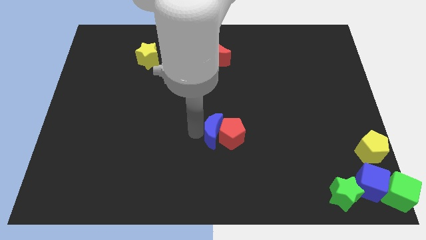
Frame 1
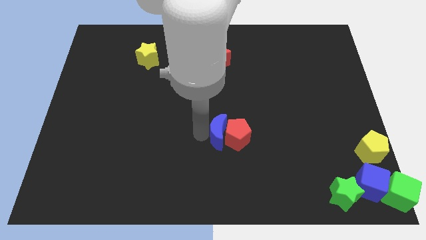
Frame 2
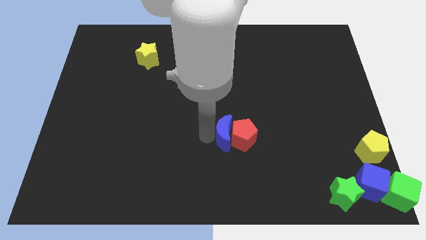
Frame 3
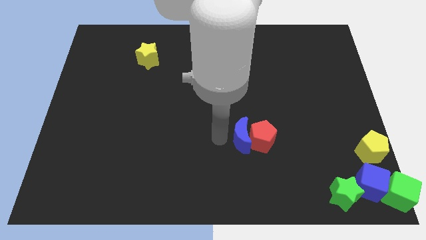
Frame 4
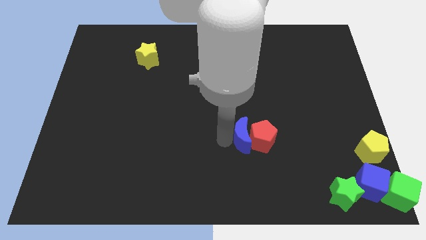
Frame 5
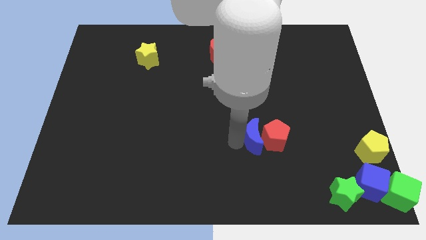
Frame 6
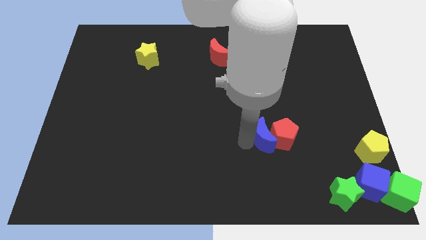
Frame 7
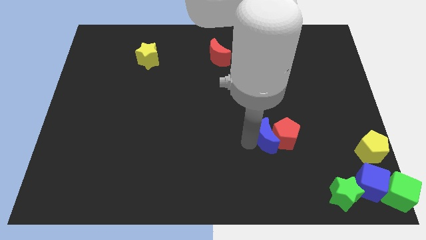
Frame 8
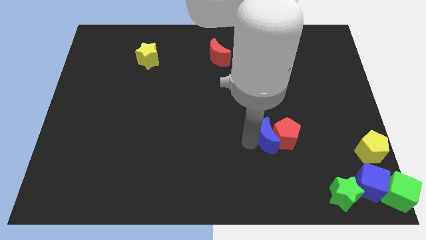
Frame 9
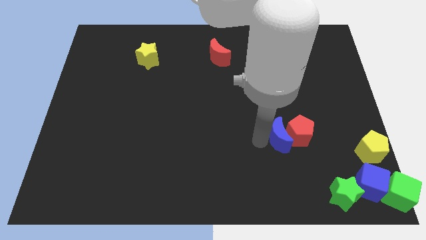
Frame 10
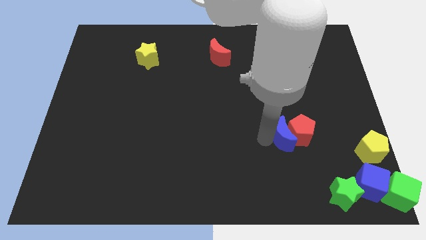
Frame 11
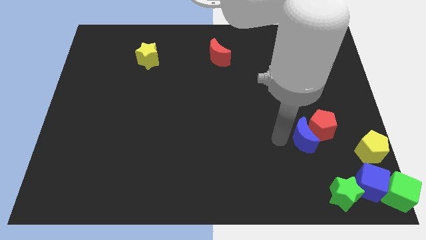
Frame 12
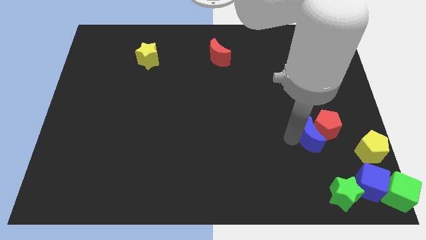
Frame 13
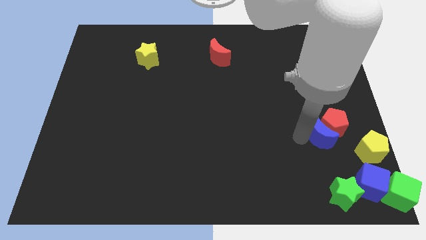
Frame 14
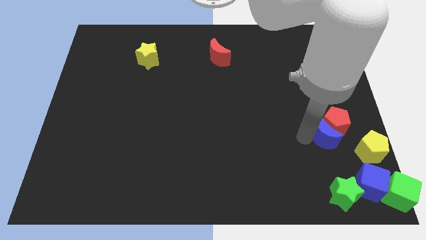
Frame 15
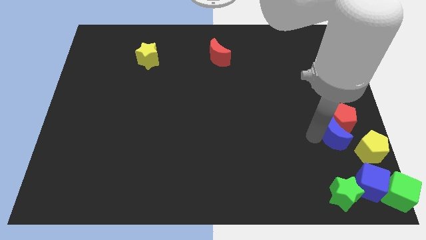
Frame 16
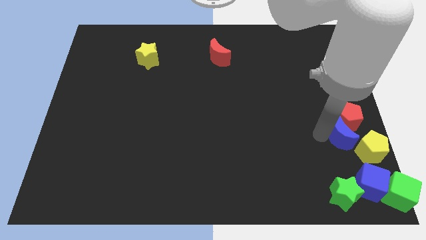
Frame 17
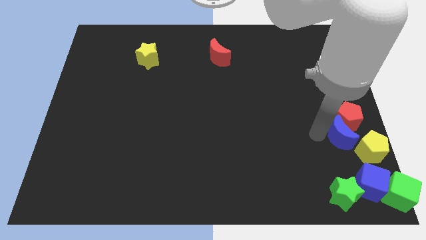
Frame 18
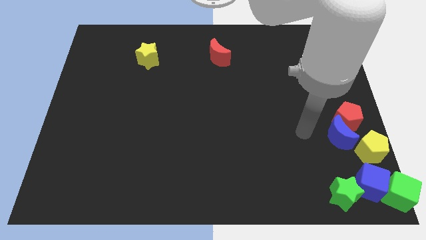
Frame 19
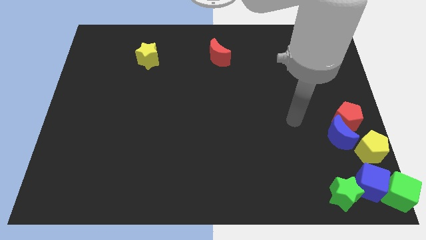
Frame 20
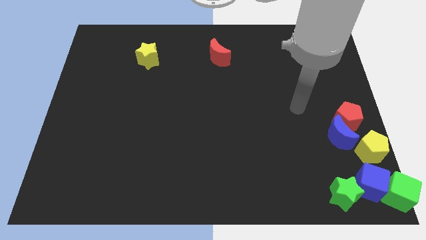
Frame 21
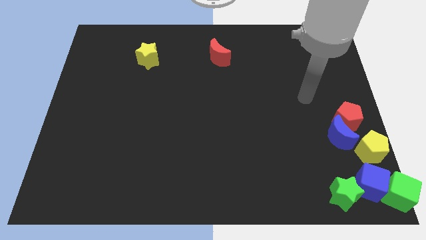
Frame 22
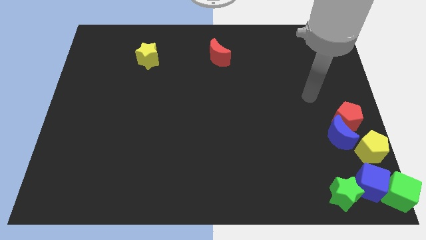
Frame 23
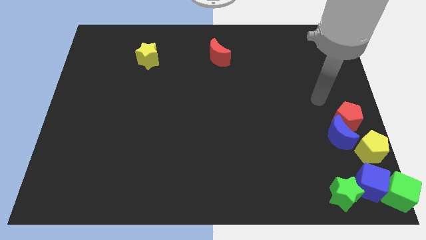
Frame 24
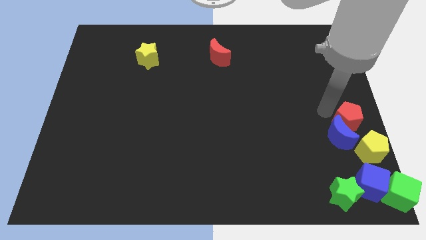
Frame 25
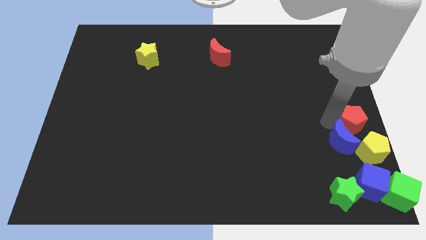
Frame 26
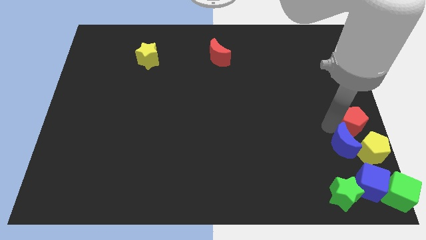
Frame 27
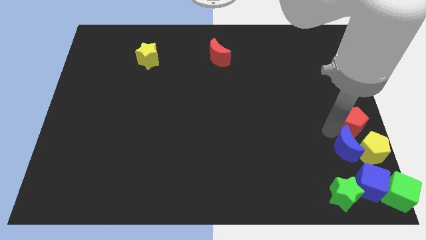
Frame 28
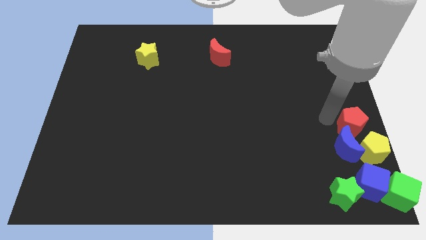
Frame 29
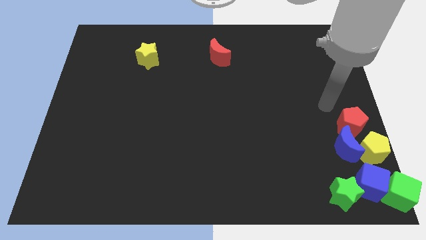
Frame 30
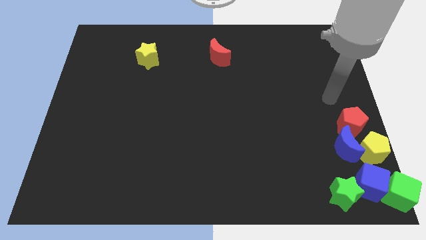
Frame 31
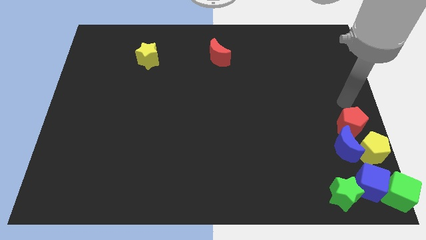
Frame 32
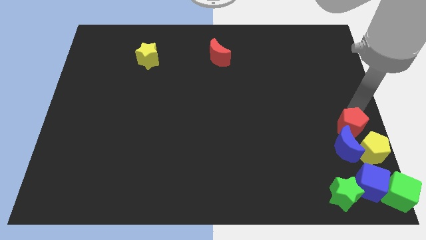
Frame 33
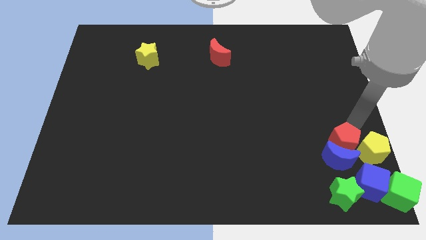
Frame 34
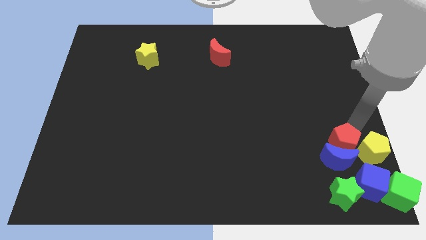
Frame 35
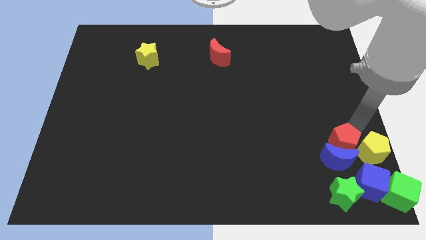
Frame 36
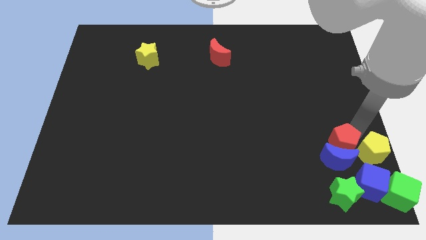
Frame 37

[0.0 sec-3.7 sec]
place blue crescent above green star

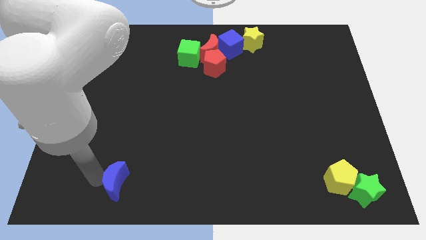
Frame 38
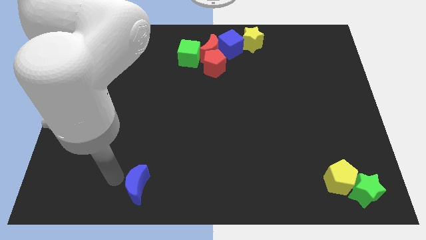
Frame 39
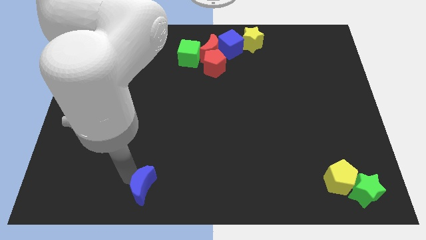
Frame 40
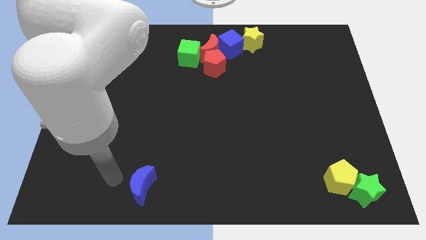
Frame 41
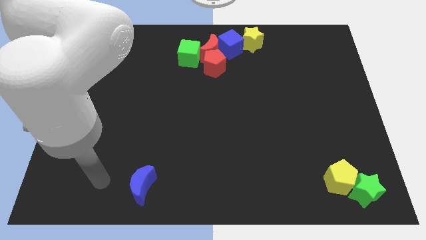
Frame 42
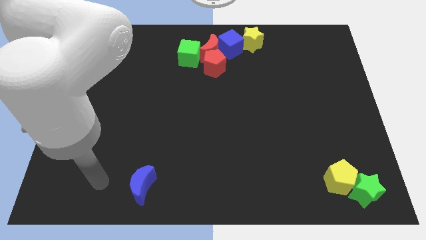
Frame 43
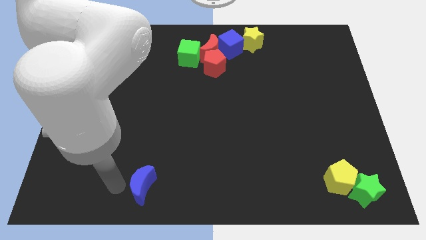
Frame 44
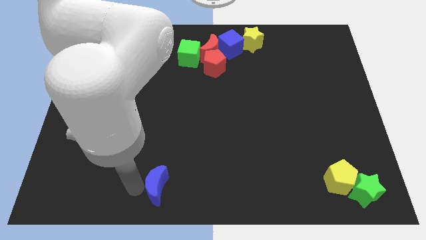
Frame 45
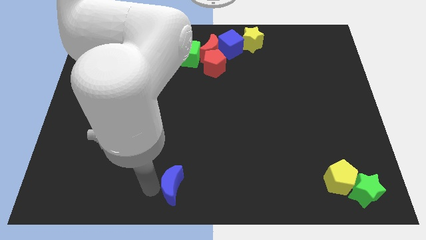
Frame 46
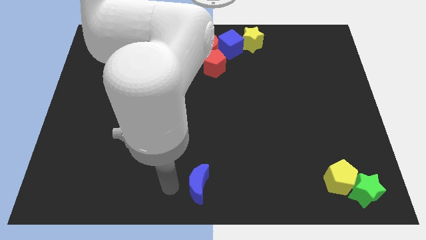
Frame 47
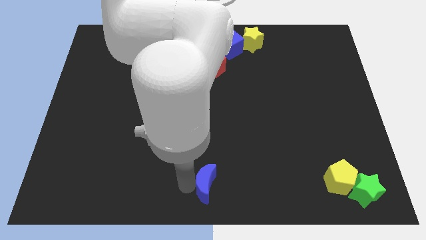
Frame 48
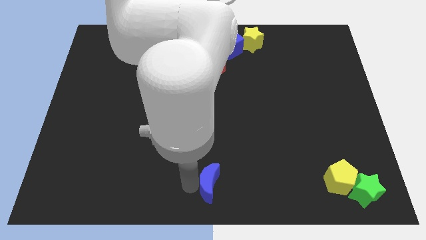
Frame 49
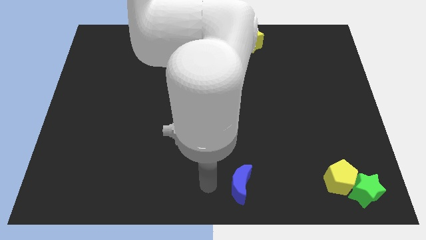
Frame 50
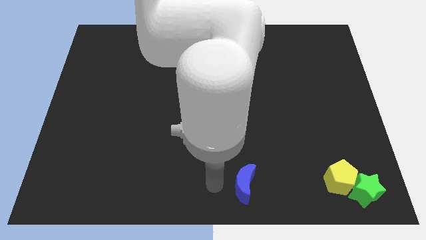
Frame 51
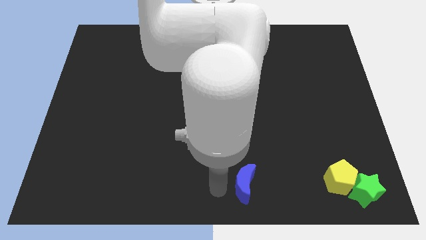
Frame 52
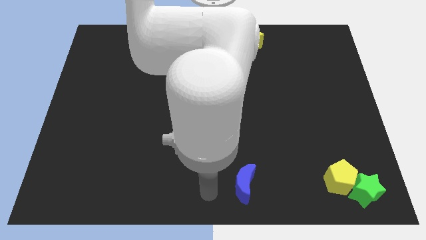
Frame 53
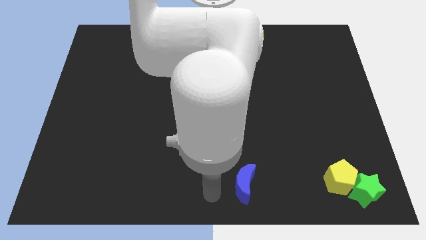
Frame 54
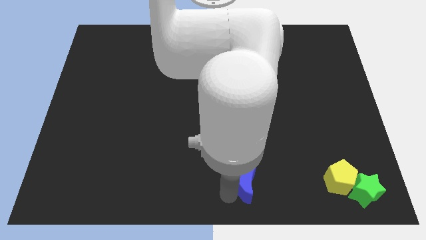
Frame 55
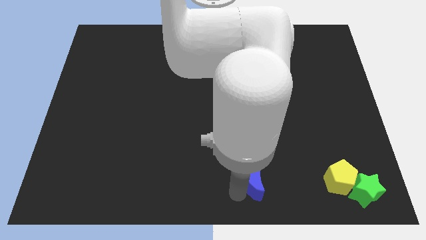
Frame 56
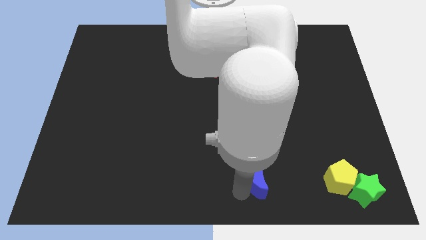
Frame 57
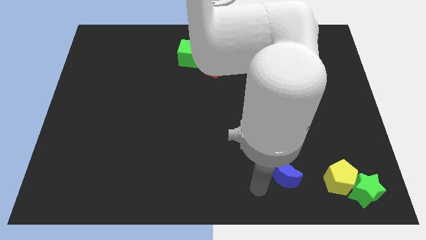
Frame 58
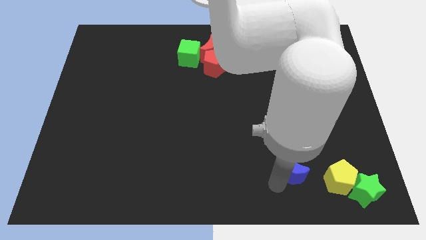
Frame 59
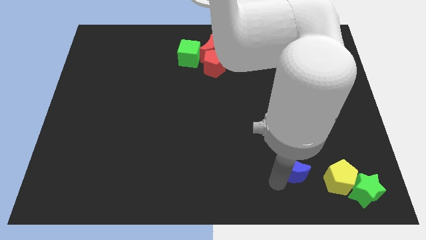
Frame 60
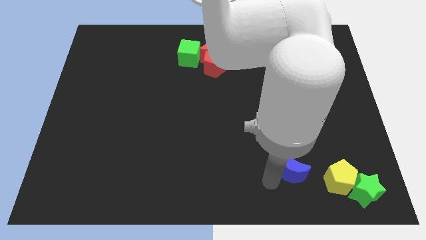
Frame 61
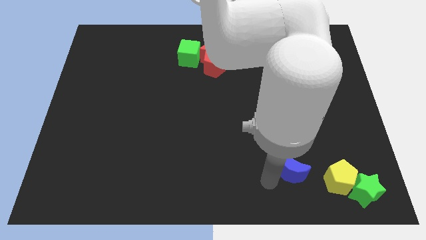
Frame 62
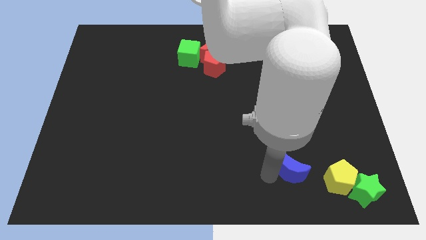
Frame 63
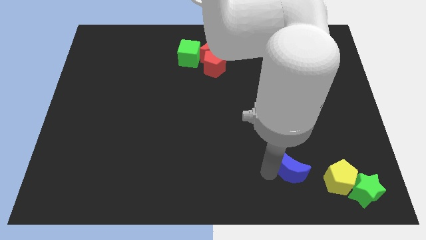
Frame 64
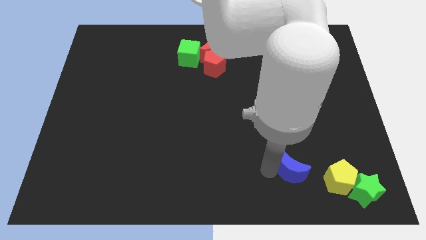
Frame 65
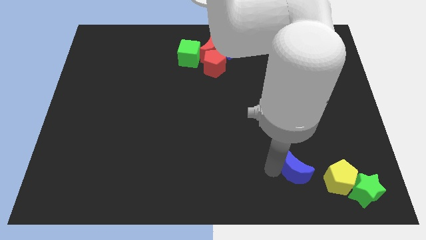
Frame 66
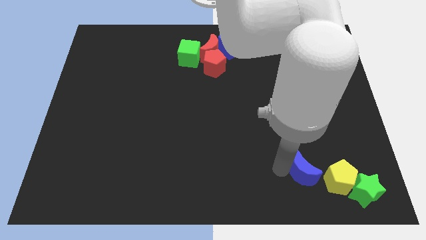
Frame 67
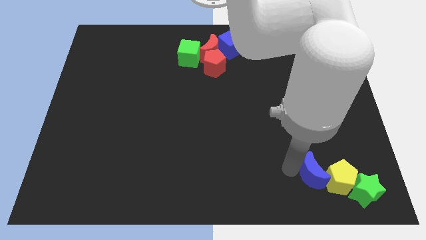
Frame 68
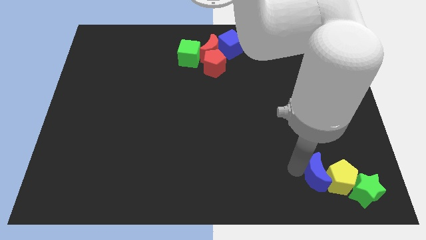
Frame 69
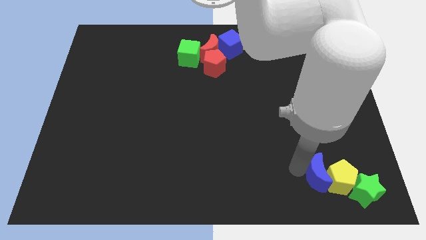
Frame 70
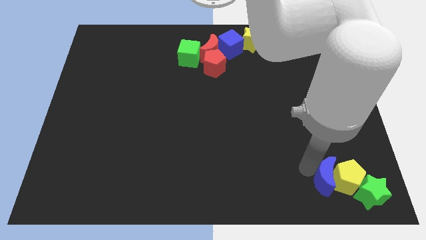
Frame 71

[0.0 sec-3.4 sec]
slide the blue crescent into the left side of the yellow pentagon

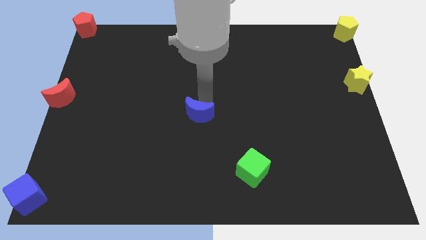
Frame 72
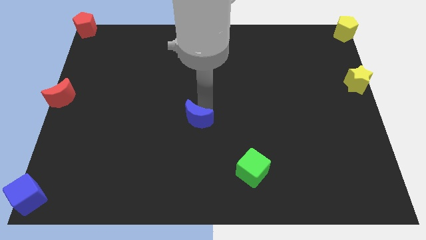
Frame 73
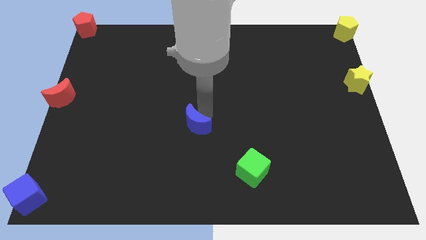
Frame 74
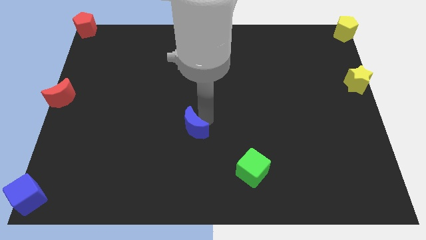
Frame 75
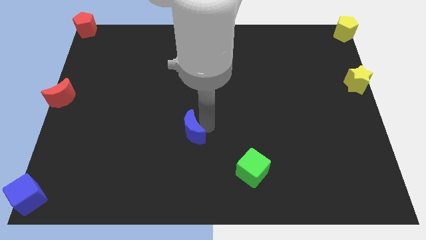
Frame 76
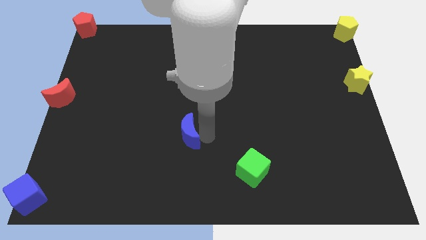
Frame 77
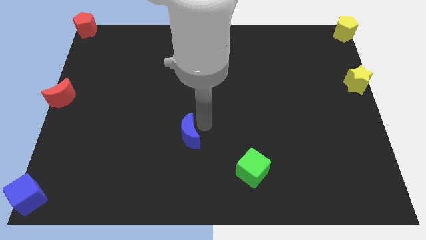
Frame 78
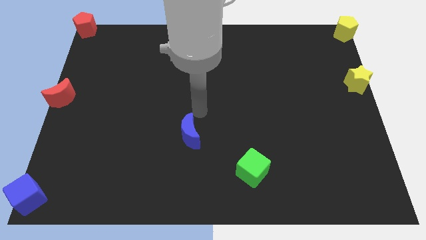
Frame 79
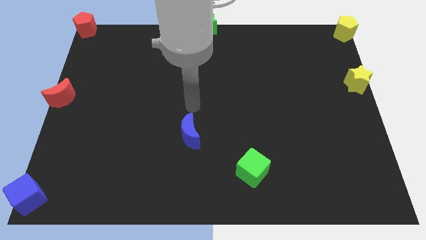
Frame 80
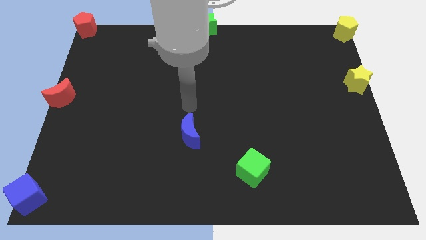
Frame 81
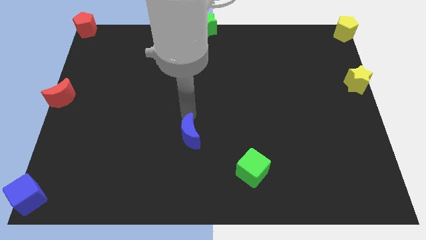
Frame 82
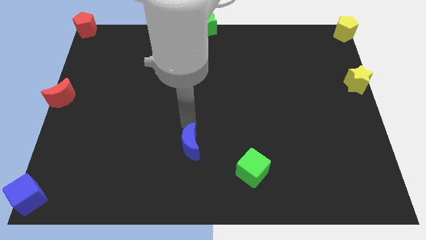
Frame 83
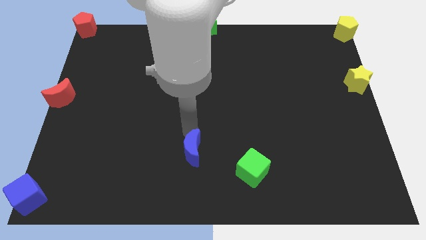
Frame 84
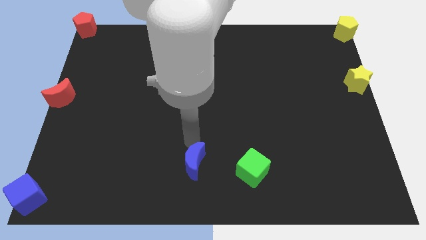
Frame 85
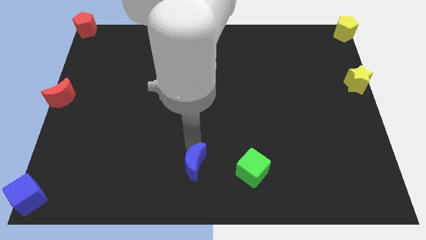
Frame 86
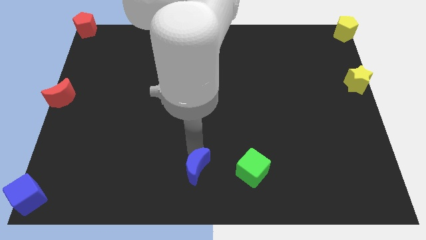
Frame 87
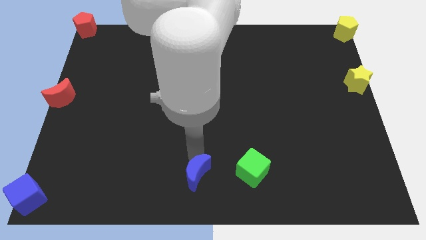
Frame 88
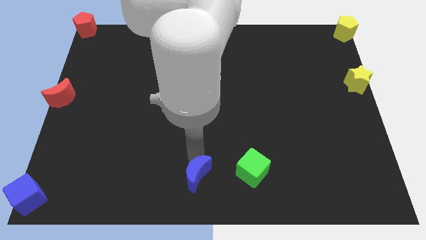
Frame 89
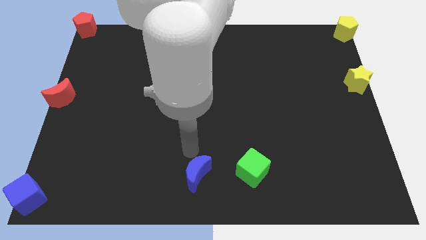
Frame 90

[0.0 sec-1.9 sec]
move the blue crescent left to the green cube

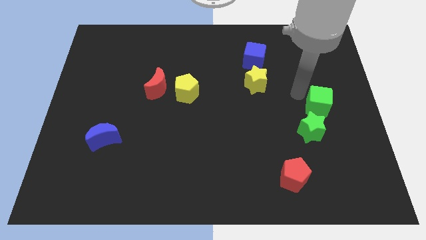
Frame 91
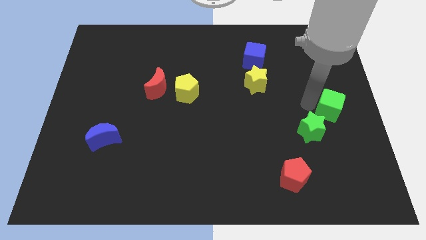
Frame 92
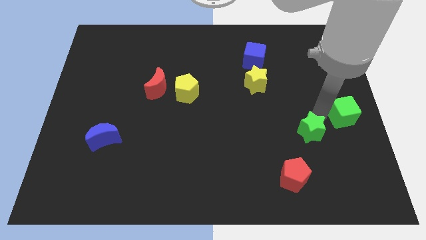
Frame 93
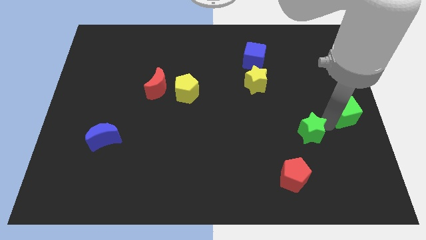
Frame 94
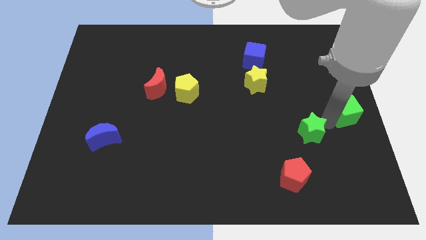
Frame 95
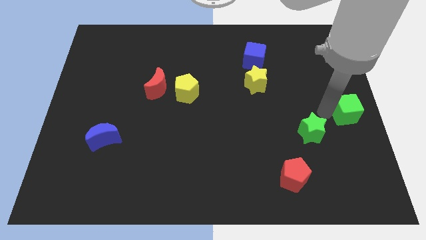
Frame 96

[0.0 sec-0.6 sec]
point your arm between green star and green cube
